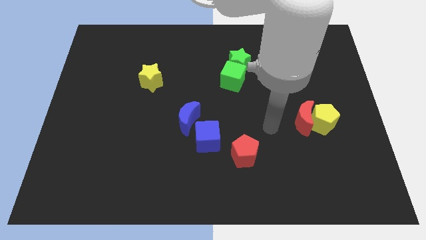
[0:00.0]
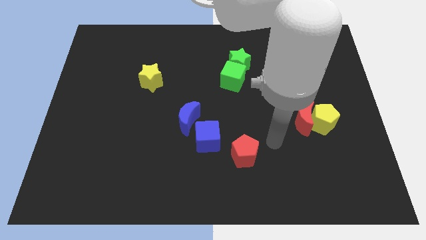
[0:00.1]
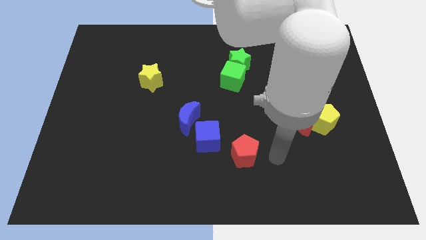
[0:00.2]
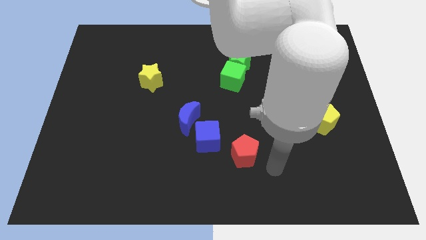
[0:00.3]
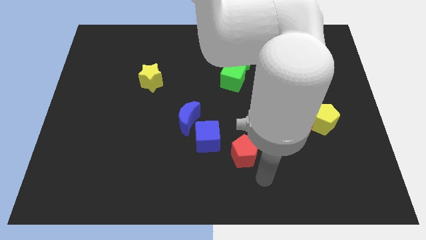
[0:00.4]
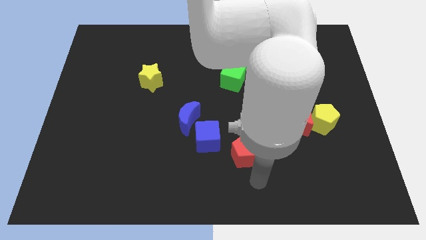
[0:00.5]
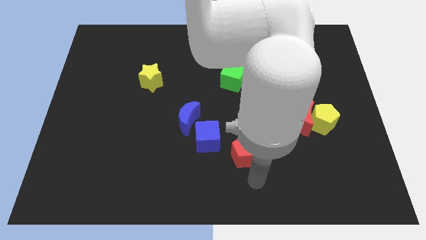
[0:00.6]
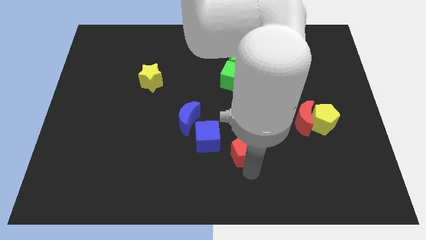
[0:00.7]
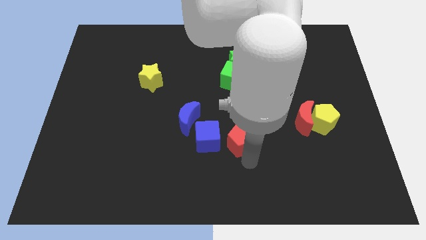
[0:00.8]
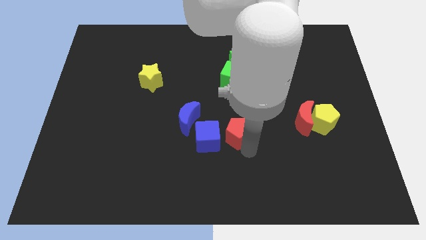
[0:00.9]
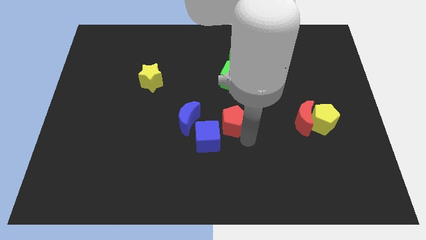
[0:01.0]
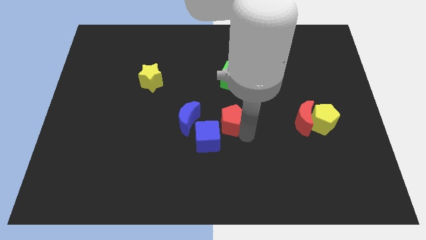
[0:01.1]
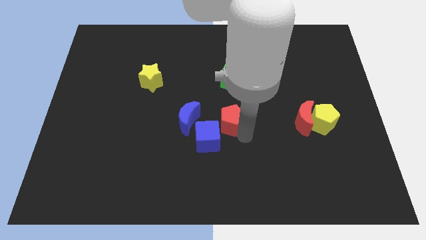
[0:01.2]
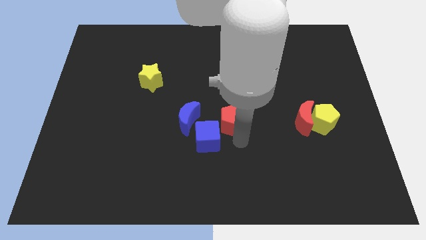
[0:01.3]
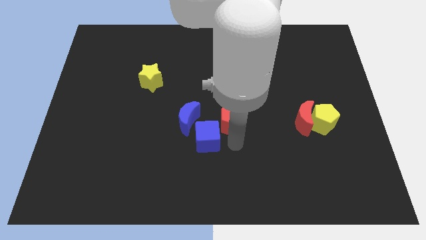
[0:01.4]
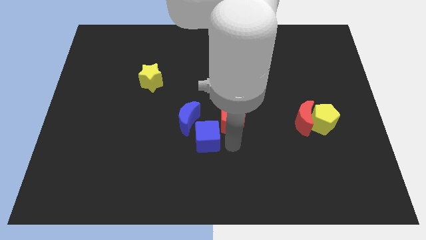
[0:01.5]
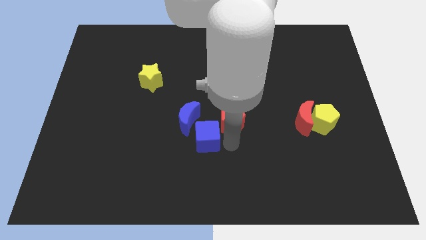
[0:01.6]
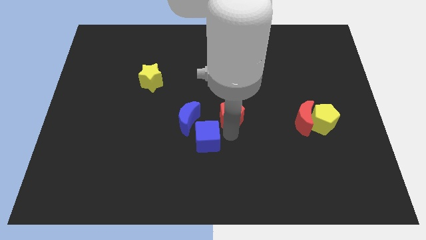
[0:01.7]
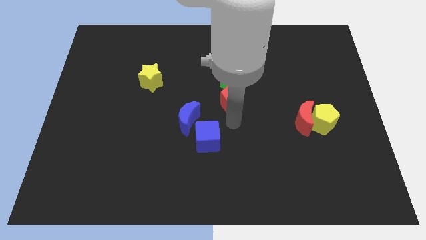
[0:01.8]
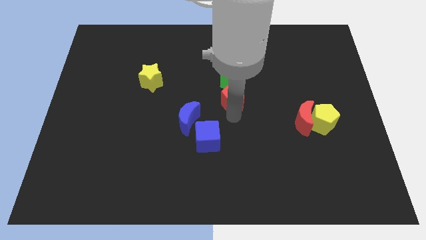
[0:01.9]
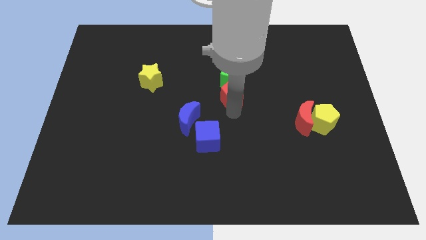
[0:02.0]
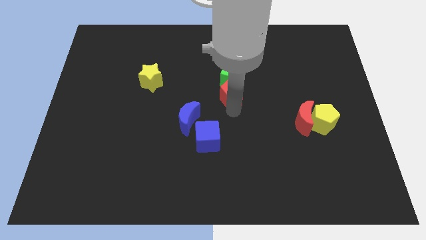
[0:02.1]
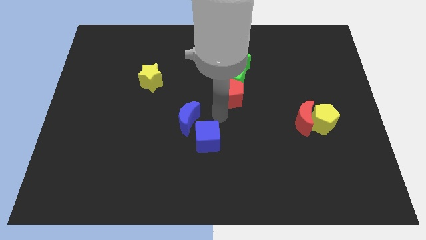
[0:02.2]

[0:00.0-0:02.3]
push the red pentagon below green cube

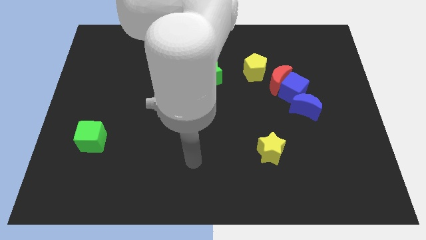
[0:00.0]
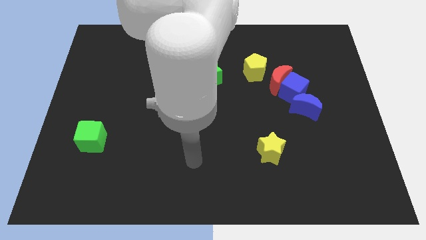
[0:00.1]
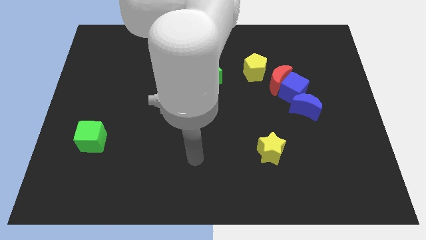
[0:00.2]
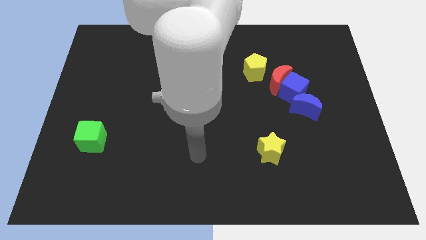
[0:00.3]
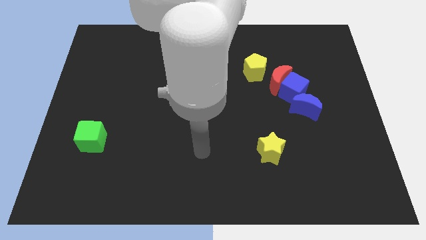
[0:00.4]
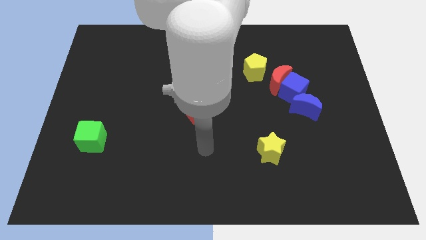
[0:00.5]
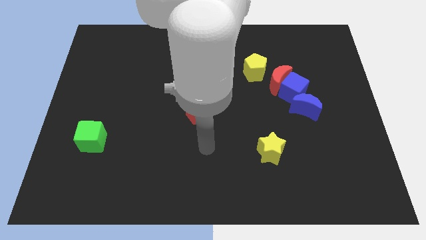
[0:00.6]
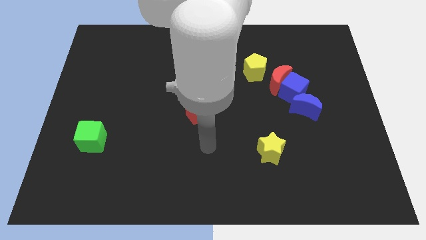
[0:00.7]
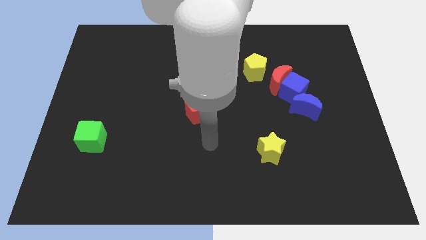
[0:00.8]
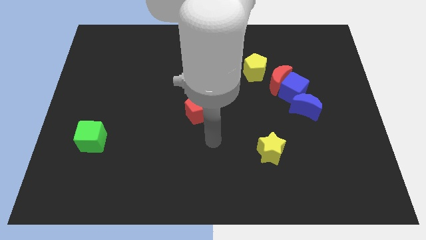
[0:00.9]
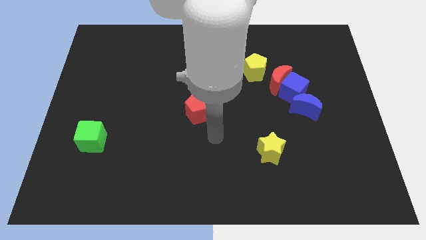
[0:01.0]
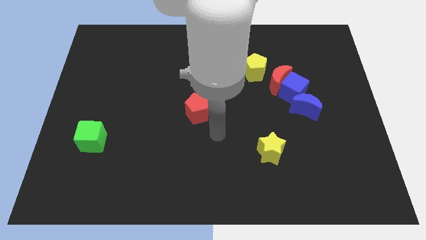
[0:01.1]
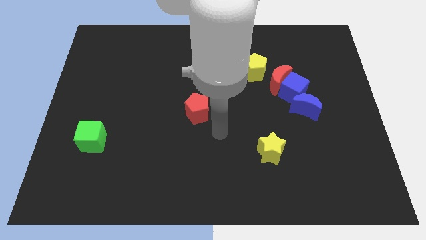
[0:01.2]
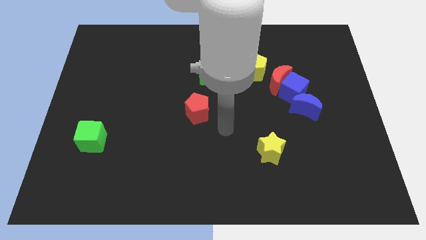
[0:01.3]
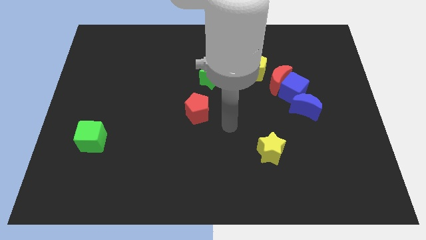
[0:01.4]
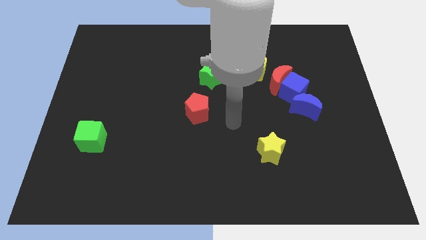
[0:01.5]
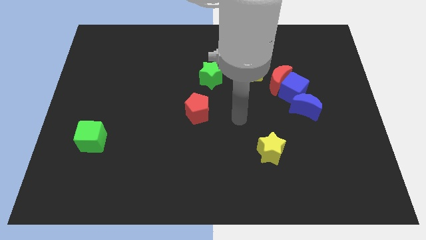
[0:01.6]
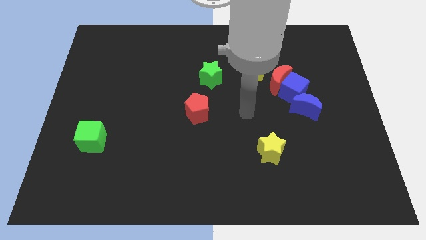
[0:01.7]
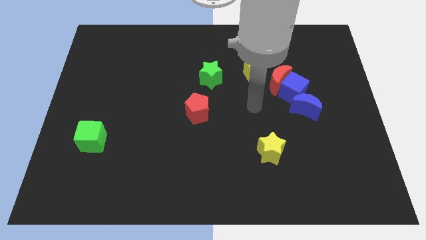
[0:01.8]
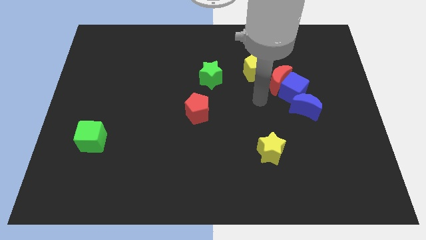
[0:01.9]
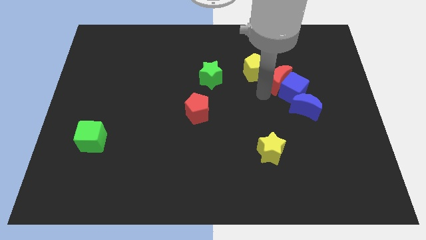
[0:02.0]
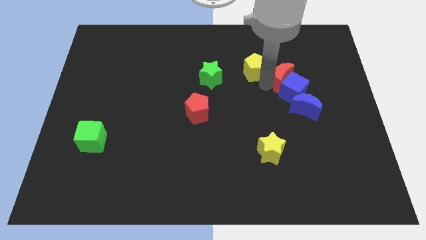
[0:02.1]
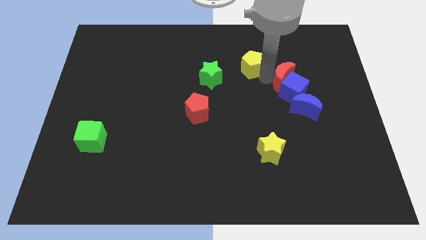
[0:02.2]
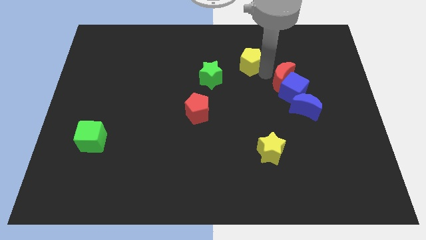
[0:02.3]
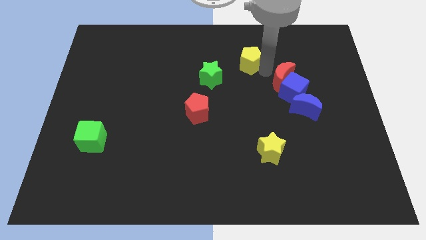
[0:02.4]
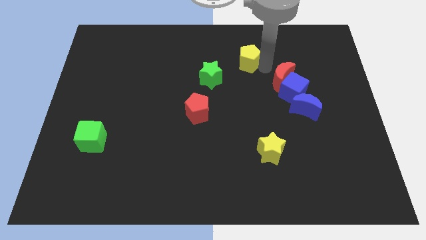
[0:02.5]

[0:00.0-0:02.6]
separate the yellow pentagon and the red crescent

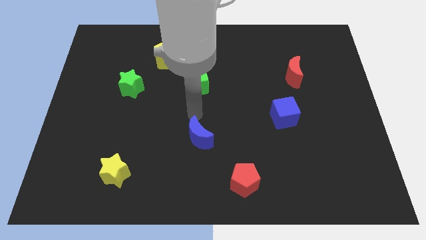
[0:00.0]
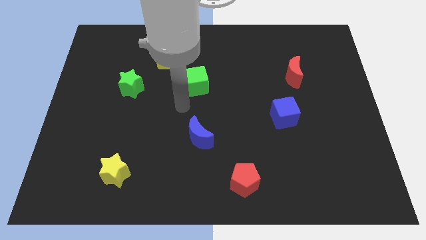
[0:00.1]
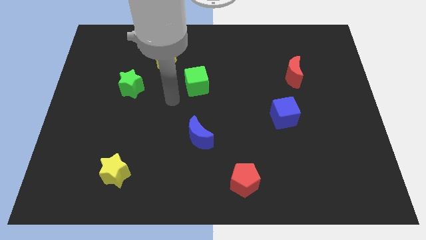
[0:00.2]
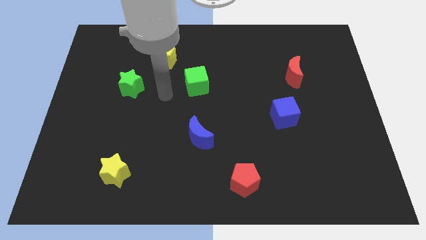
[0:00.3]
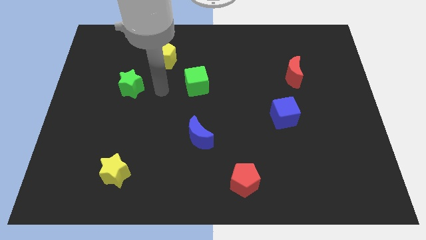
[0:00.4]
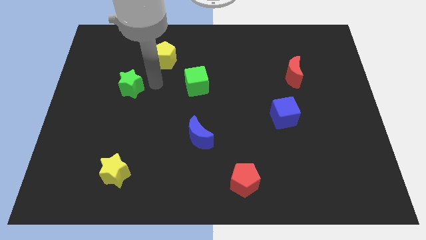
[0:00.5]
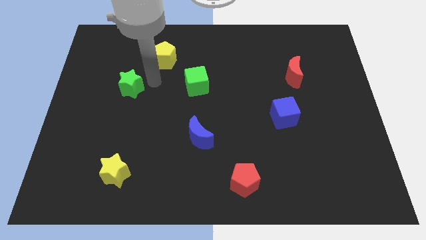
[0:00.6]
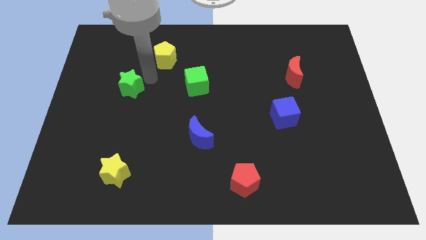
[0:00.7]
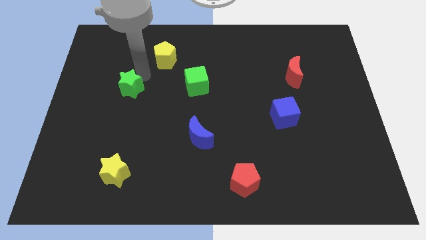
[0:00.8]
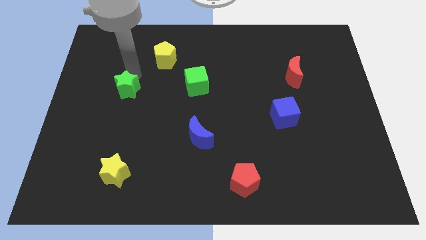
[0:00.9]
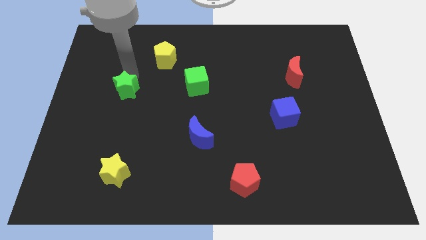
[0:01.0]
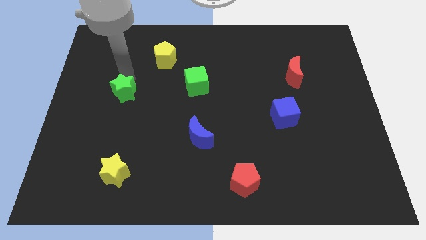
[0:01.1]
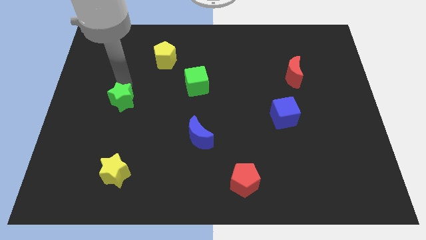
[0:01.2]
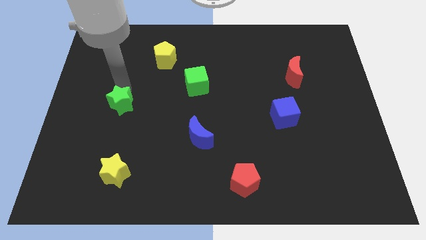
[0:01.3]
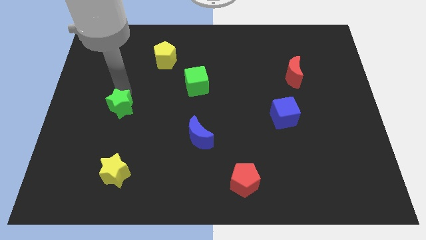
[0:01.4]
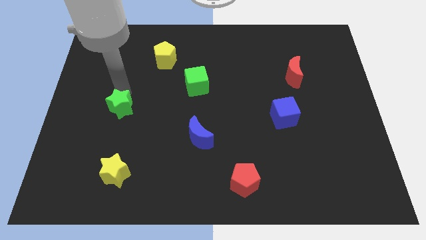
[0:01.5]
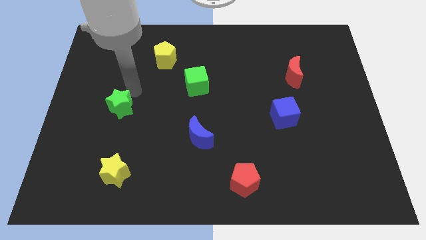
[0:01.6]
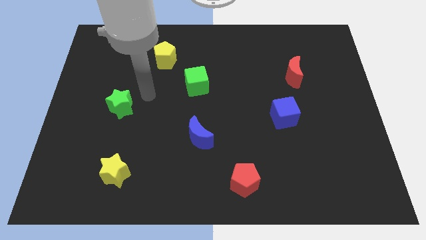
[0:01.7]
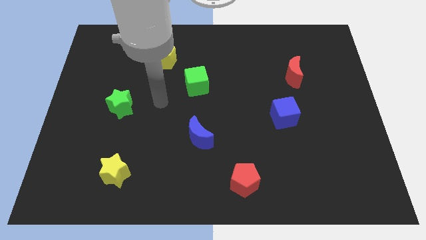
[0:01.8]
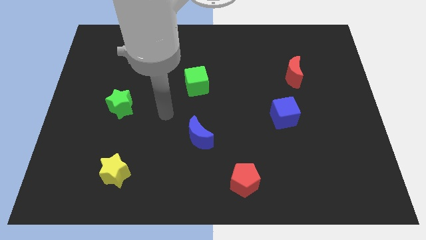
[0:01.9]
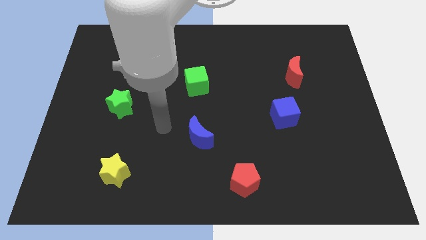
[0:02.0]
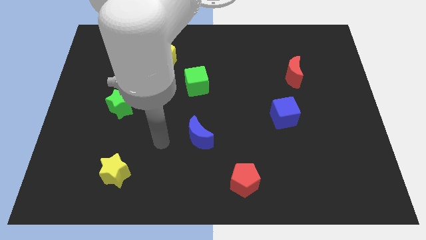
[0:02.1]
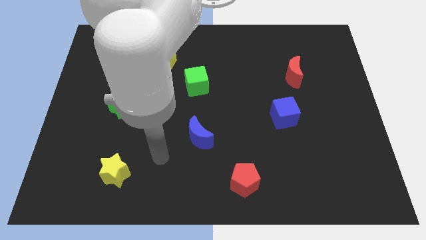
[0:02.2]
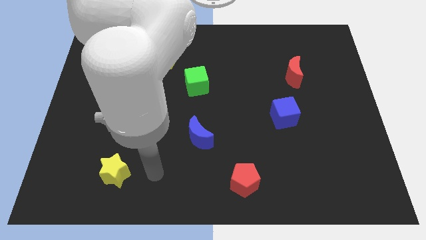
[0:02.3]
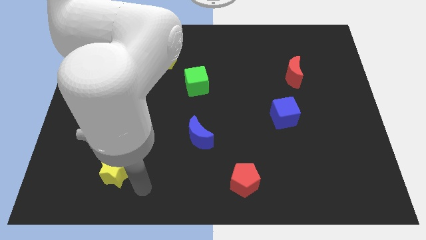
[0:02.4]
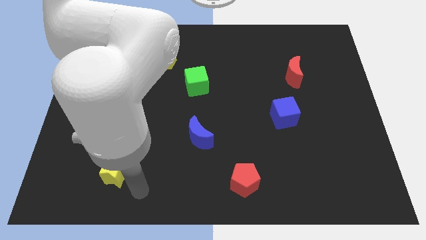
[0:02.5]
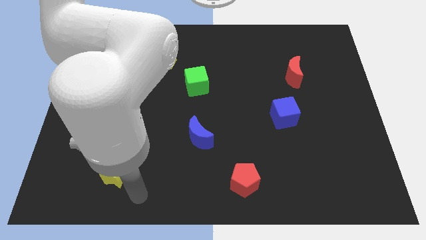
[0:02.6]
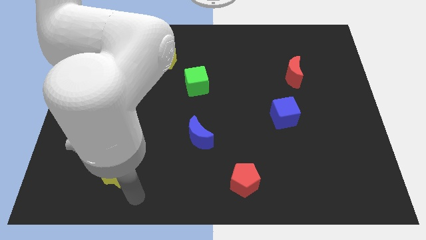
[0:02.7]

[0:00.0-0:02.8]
move the green star slightly to the bottom

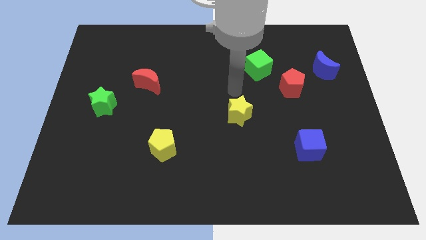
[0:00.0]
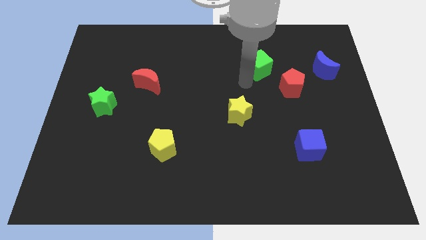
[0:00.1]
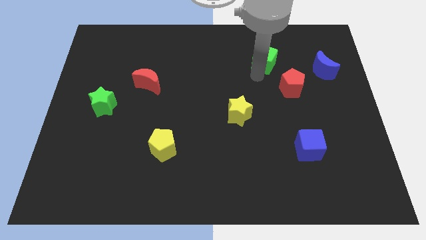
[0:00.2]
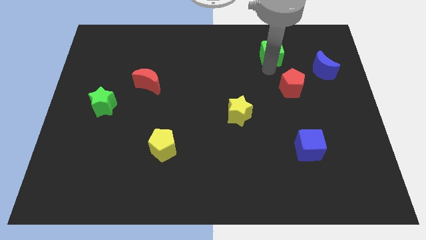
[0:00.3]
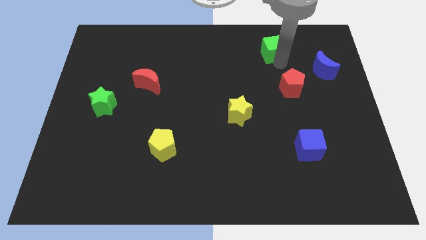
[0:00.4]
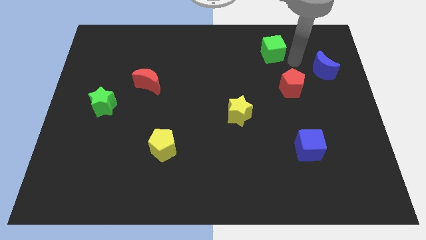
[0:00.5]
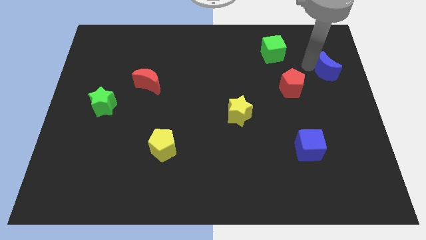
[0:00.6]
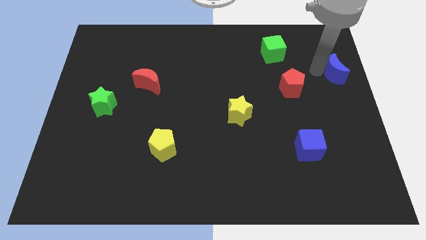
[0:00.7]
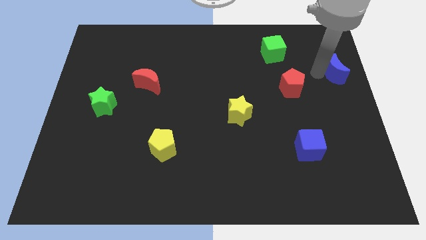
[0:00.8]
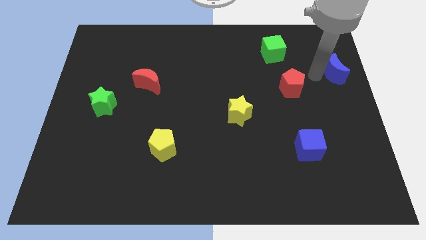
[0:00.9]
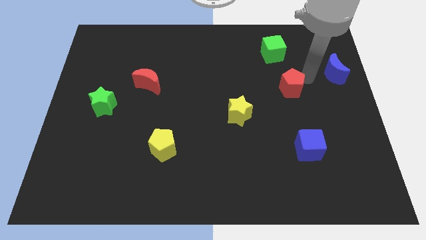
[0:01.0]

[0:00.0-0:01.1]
push green cube and blue crescent apart

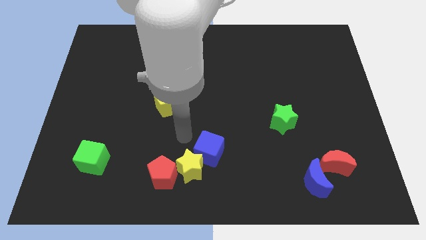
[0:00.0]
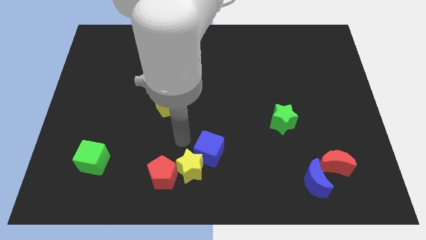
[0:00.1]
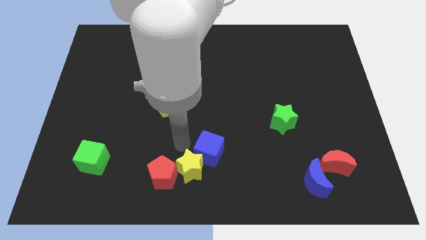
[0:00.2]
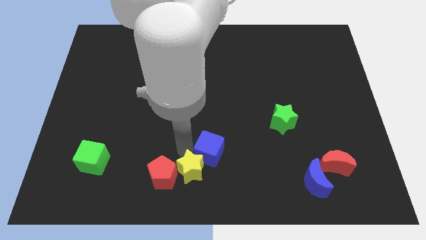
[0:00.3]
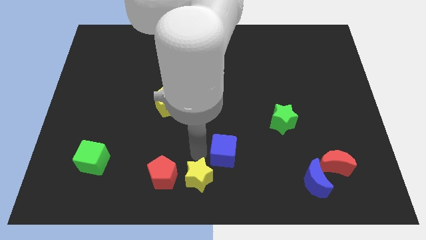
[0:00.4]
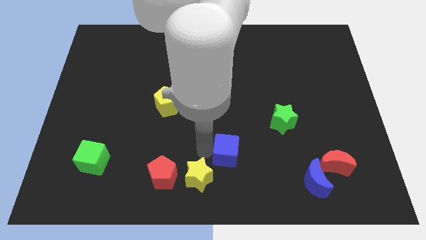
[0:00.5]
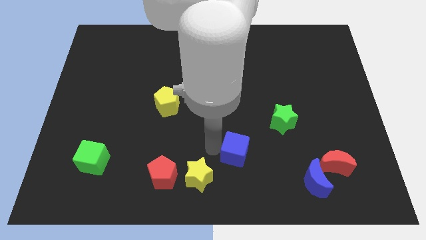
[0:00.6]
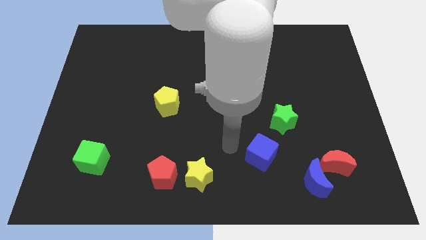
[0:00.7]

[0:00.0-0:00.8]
separate the blue cube from the yellow star
